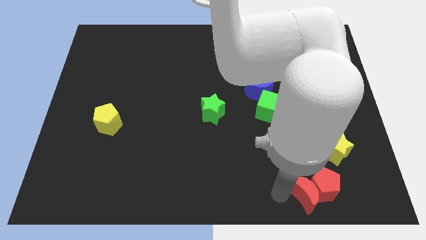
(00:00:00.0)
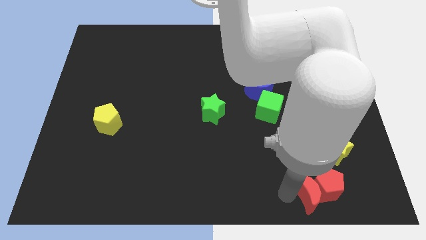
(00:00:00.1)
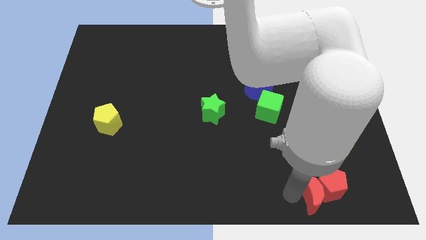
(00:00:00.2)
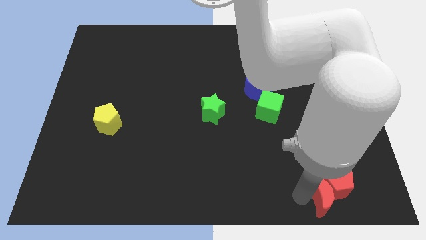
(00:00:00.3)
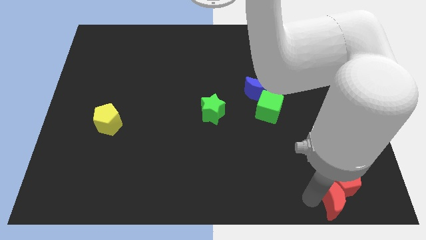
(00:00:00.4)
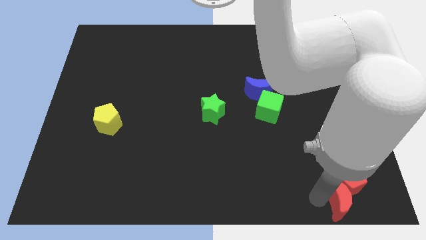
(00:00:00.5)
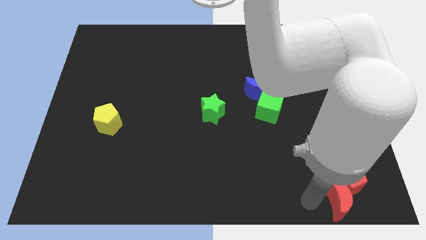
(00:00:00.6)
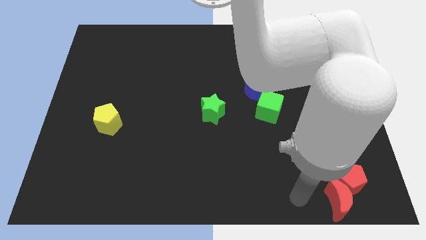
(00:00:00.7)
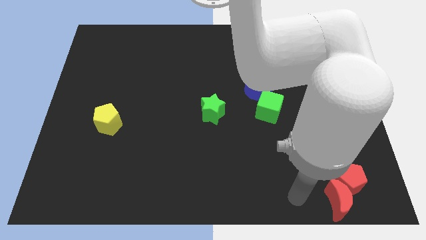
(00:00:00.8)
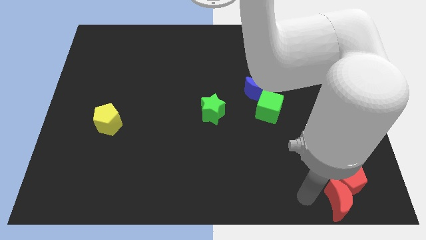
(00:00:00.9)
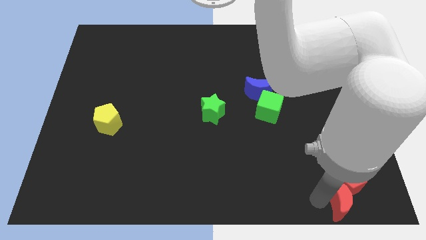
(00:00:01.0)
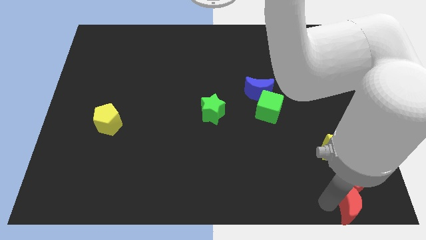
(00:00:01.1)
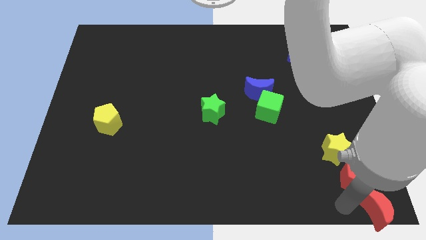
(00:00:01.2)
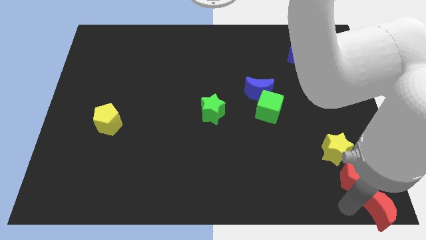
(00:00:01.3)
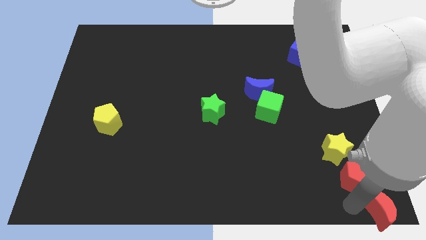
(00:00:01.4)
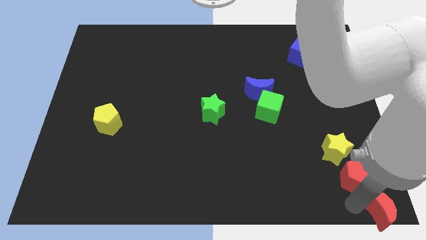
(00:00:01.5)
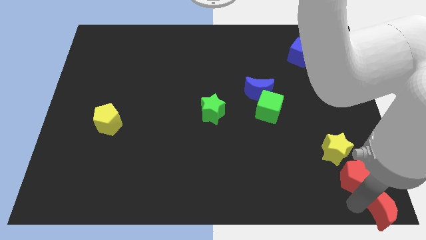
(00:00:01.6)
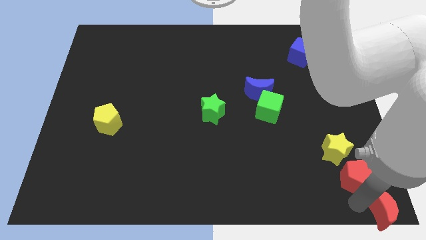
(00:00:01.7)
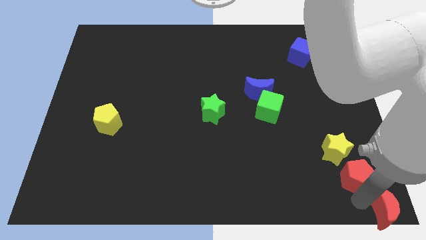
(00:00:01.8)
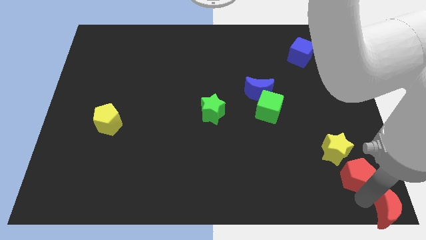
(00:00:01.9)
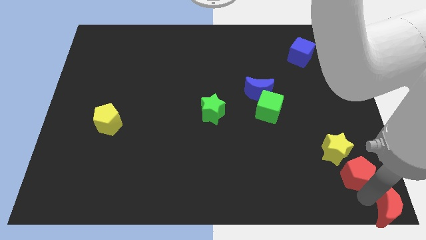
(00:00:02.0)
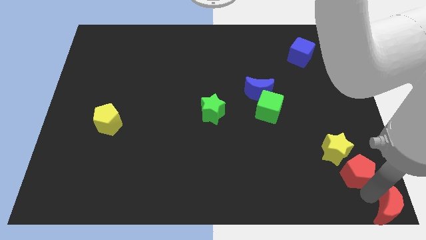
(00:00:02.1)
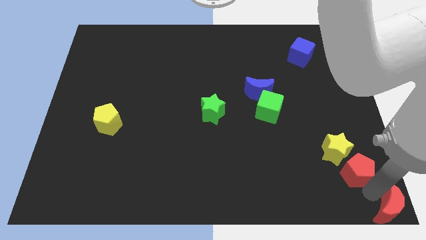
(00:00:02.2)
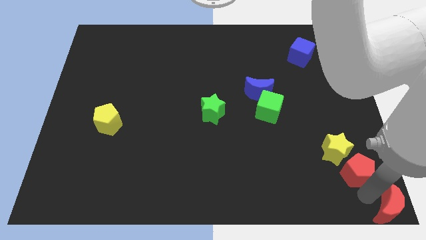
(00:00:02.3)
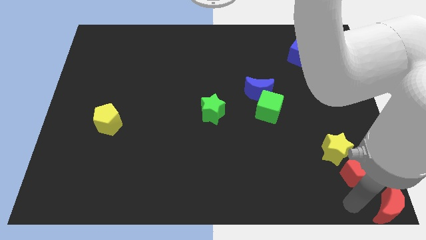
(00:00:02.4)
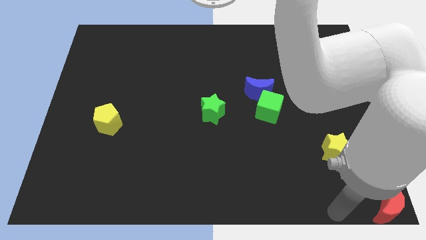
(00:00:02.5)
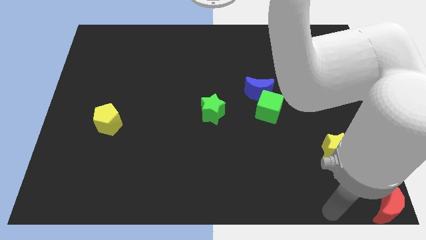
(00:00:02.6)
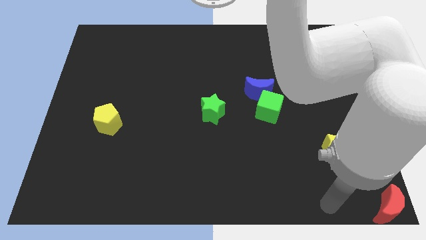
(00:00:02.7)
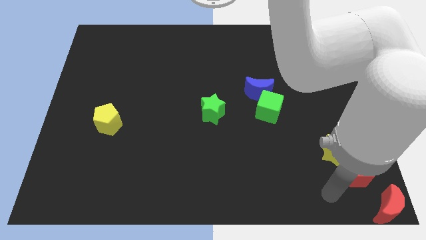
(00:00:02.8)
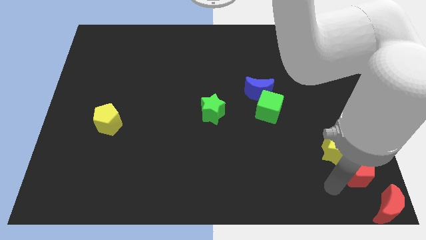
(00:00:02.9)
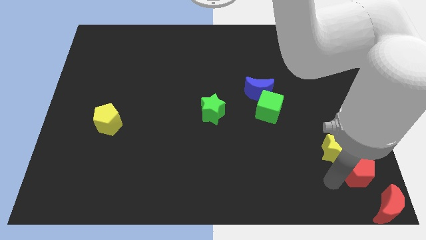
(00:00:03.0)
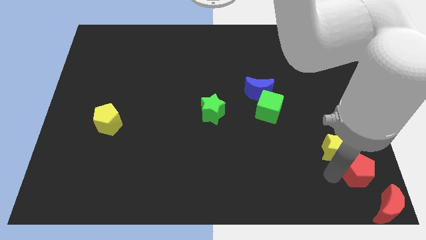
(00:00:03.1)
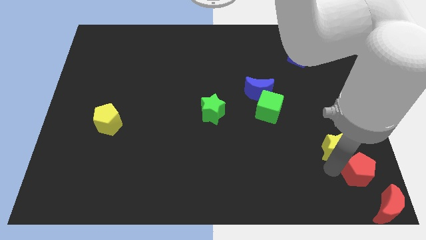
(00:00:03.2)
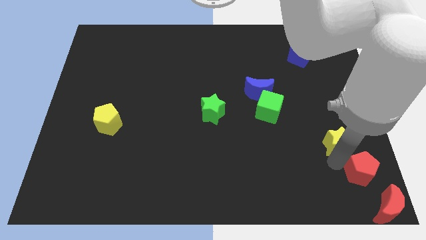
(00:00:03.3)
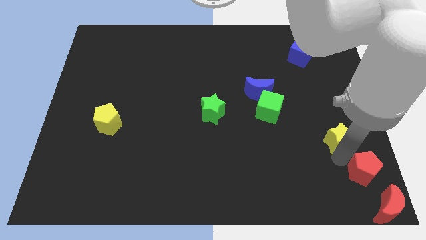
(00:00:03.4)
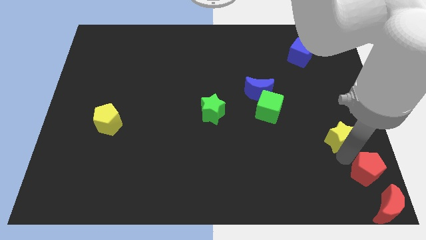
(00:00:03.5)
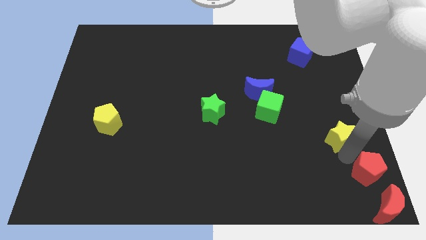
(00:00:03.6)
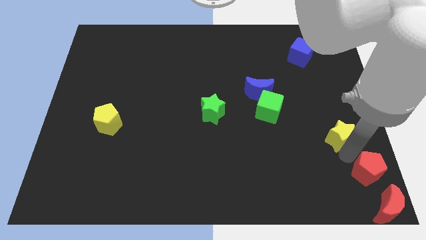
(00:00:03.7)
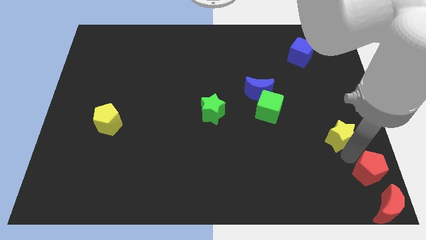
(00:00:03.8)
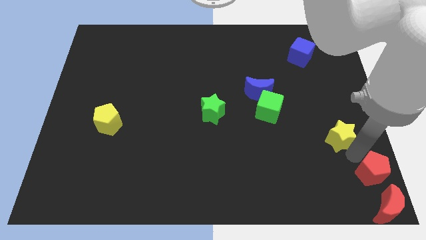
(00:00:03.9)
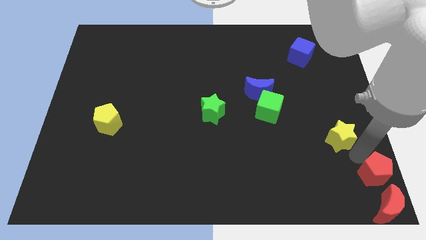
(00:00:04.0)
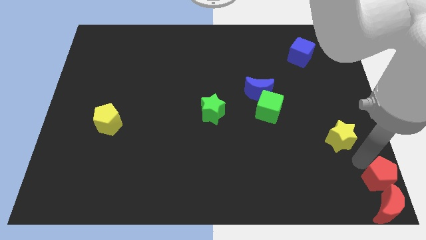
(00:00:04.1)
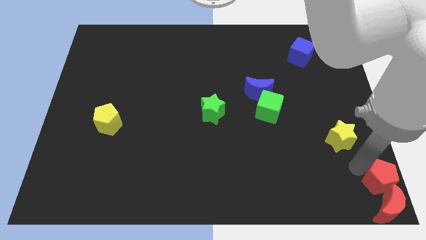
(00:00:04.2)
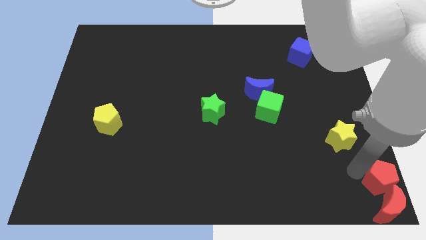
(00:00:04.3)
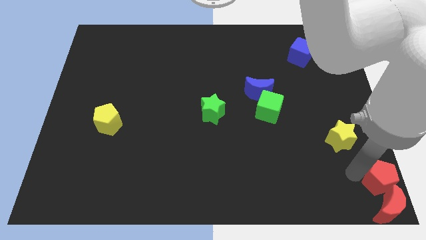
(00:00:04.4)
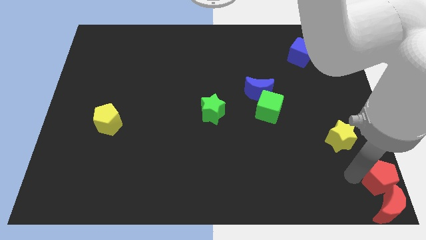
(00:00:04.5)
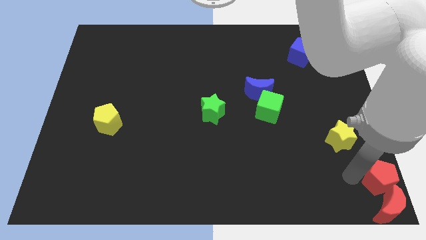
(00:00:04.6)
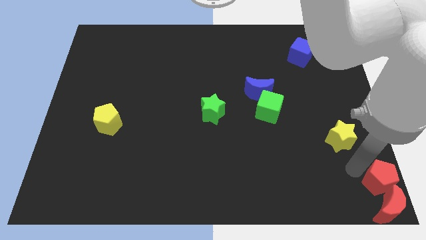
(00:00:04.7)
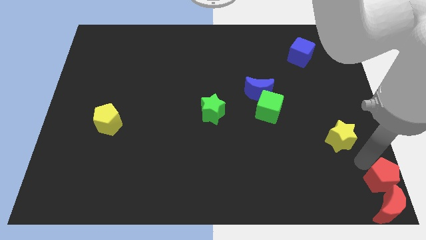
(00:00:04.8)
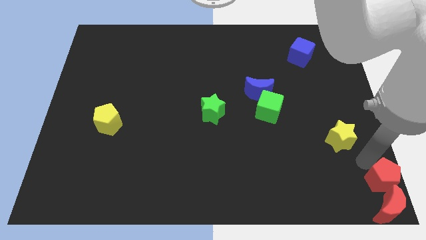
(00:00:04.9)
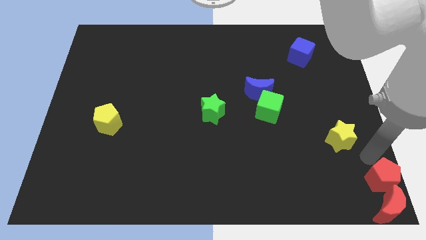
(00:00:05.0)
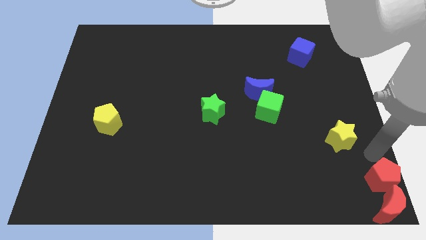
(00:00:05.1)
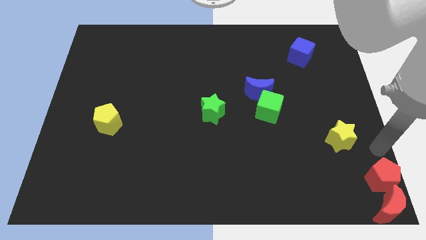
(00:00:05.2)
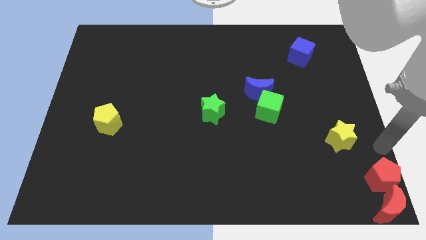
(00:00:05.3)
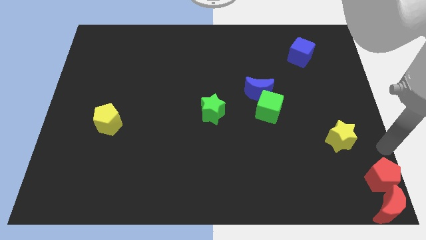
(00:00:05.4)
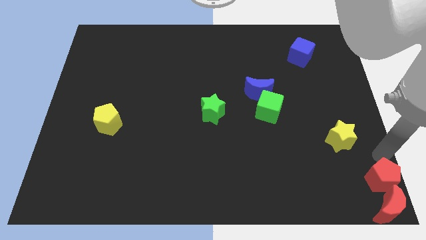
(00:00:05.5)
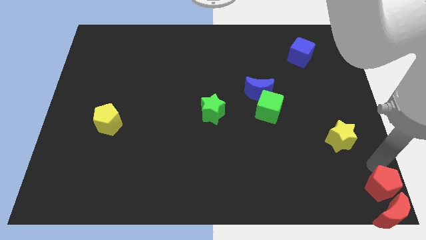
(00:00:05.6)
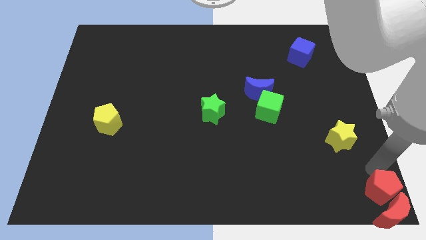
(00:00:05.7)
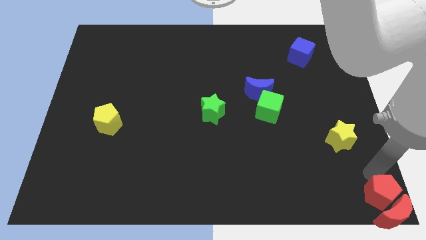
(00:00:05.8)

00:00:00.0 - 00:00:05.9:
push the red blocks at the bottom right corner of the board

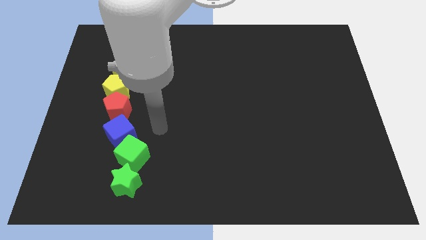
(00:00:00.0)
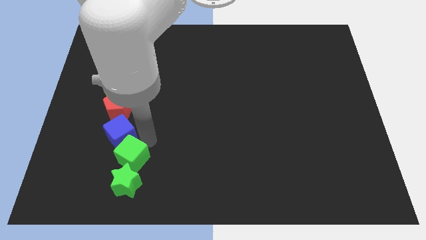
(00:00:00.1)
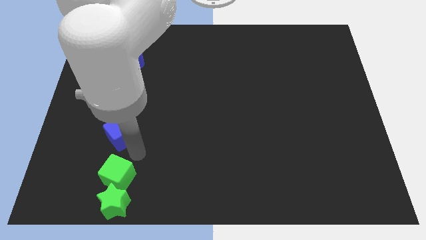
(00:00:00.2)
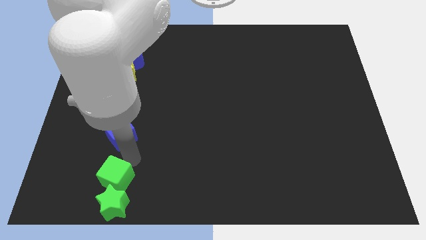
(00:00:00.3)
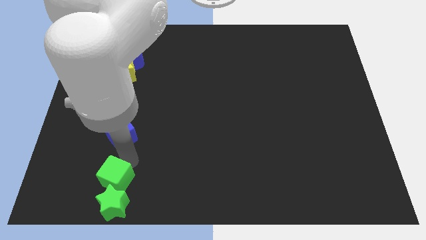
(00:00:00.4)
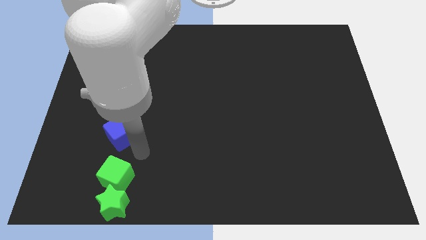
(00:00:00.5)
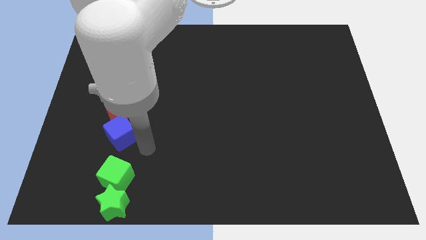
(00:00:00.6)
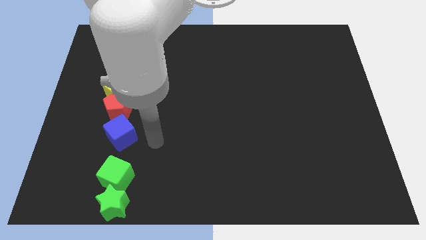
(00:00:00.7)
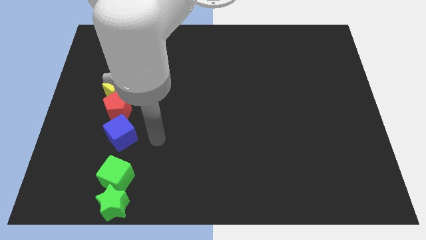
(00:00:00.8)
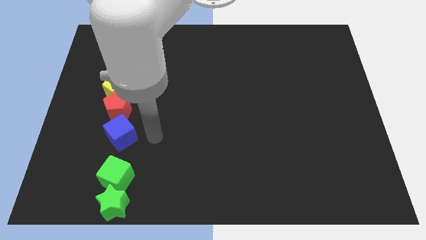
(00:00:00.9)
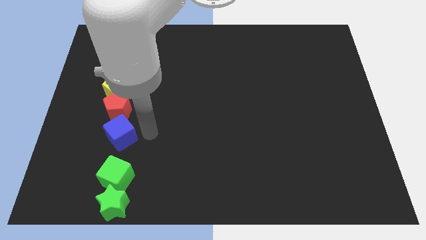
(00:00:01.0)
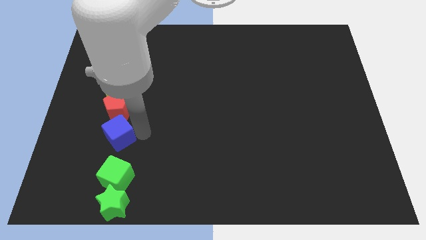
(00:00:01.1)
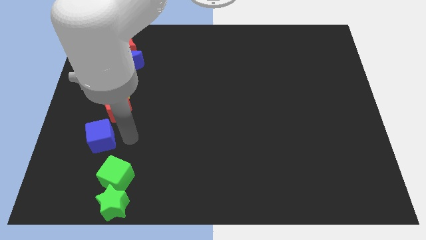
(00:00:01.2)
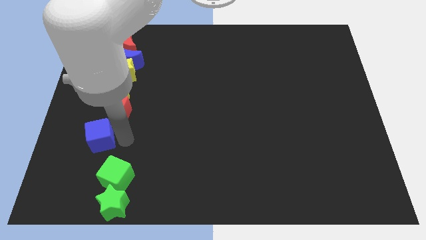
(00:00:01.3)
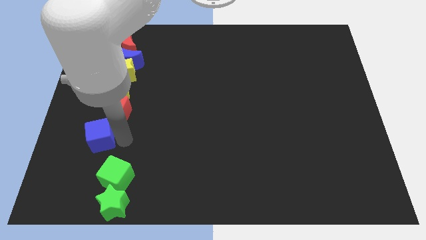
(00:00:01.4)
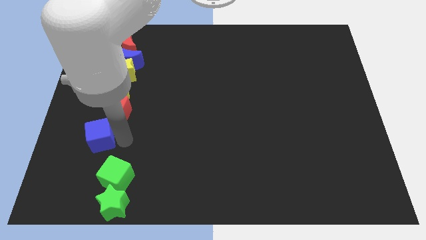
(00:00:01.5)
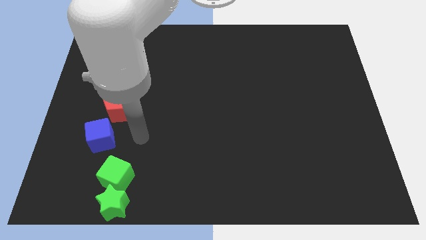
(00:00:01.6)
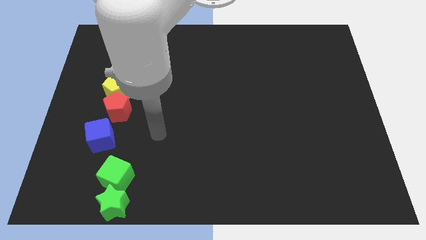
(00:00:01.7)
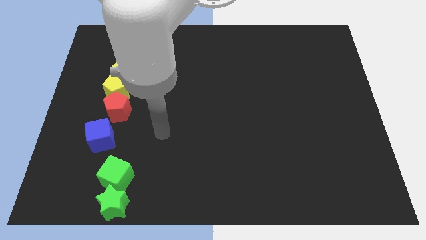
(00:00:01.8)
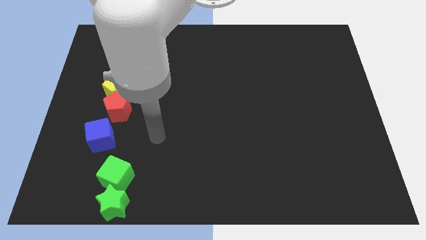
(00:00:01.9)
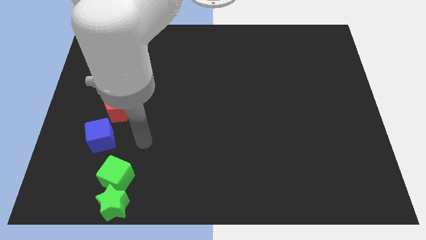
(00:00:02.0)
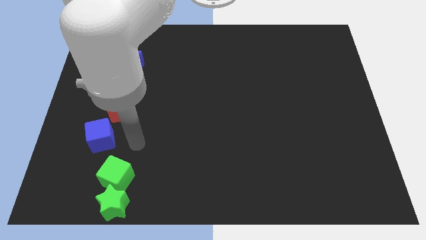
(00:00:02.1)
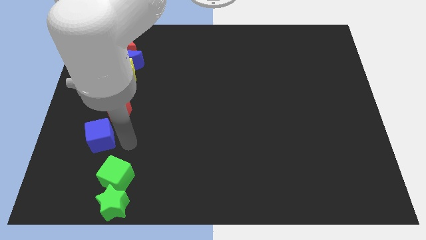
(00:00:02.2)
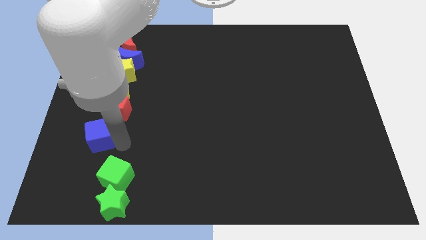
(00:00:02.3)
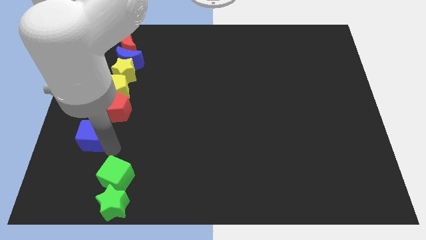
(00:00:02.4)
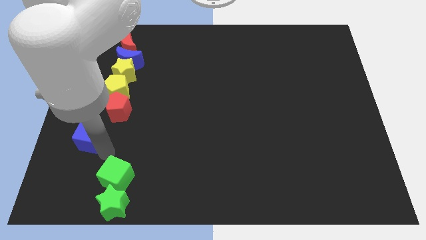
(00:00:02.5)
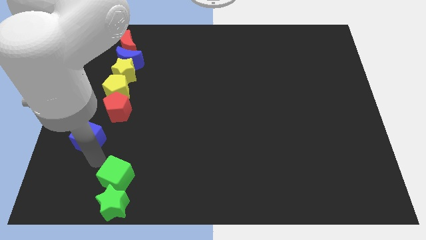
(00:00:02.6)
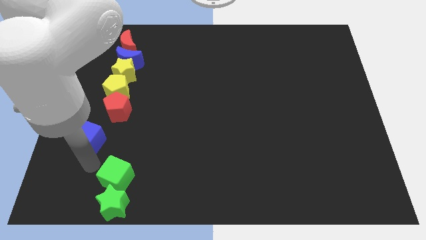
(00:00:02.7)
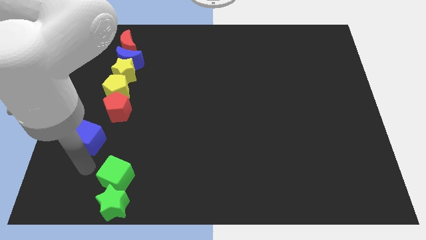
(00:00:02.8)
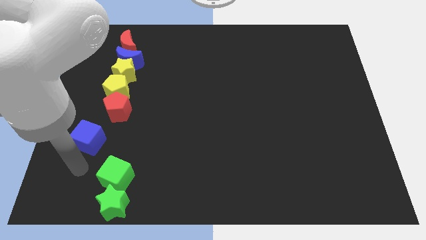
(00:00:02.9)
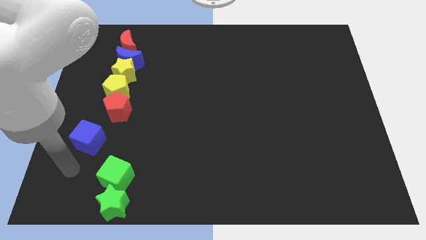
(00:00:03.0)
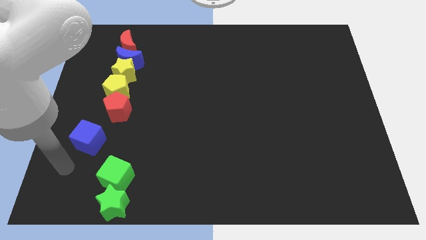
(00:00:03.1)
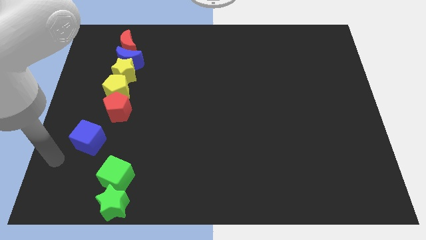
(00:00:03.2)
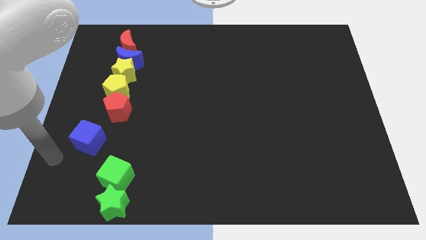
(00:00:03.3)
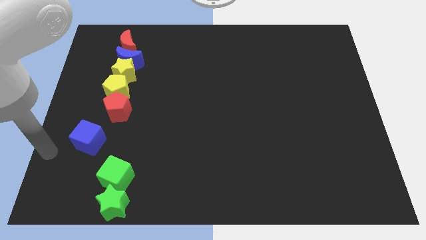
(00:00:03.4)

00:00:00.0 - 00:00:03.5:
separate the blue block from group of block
